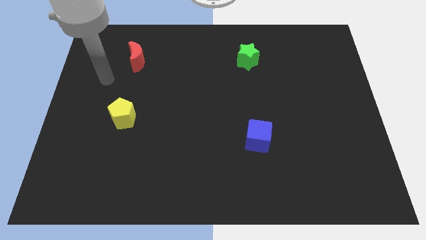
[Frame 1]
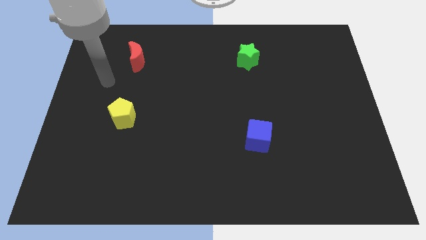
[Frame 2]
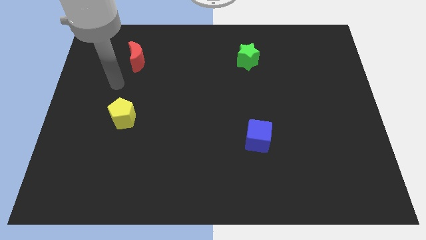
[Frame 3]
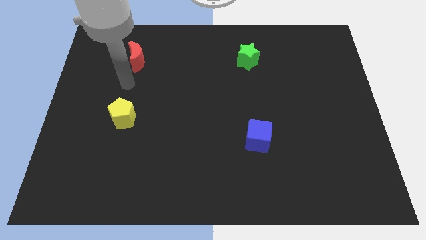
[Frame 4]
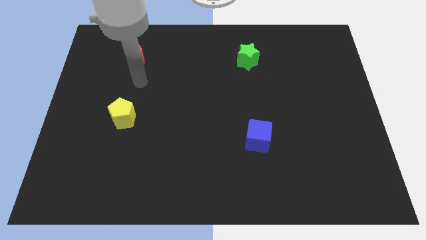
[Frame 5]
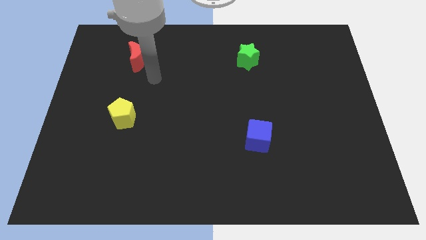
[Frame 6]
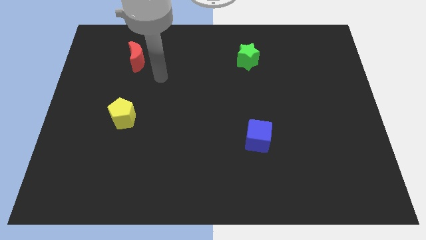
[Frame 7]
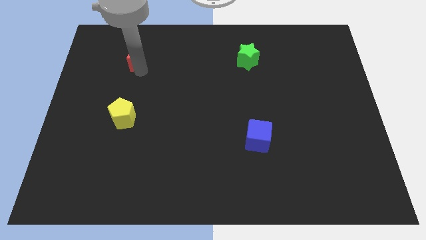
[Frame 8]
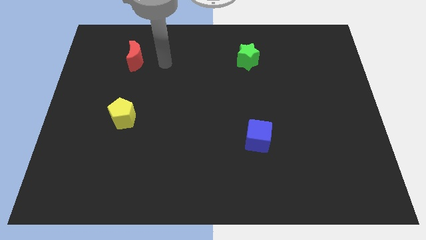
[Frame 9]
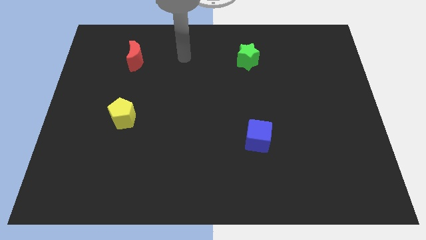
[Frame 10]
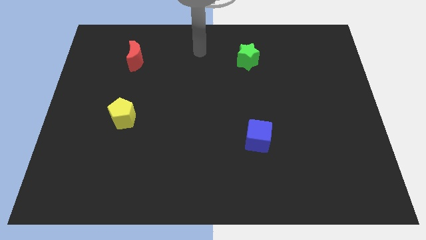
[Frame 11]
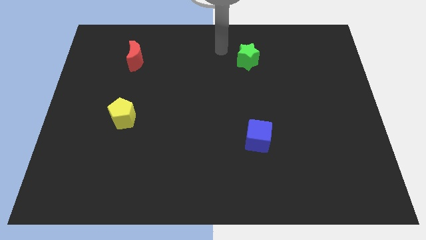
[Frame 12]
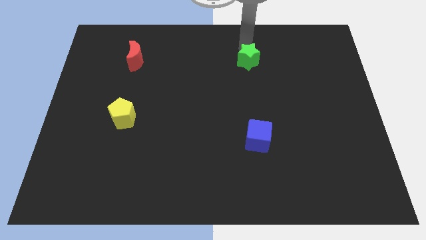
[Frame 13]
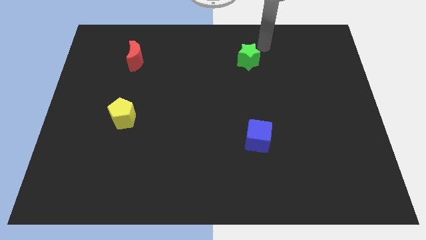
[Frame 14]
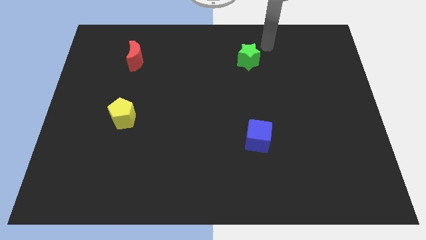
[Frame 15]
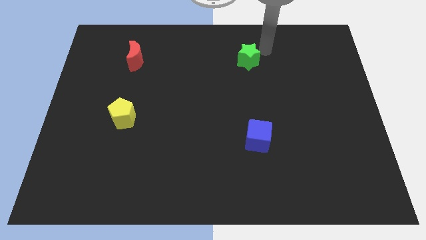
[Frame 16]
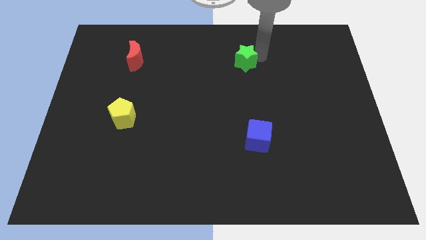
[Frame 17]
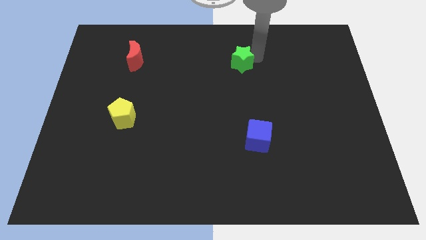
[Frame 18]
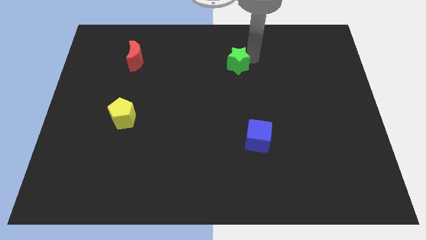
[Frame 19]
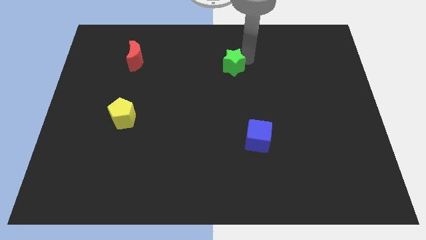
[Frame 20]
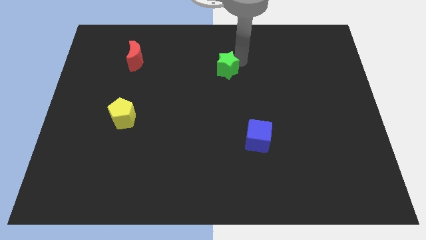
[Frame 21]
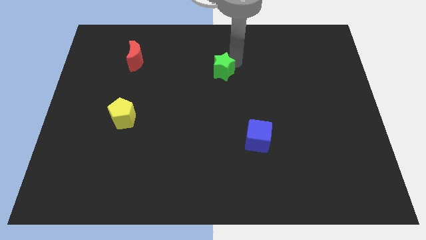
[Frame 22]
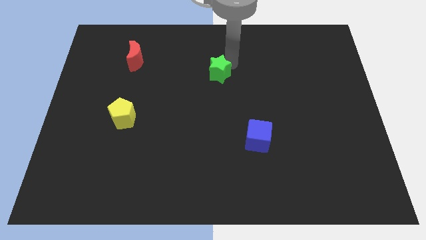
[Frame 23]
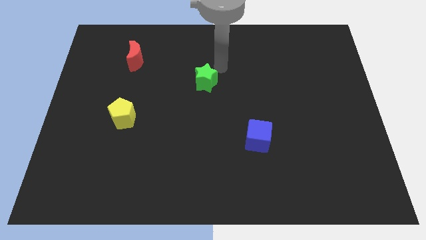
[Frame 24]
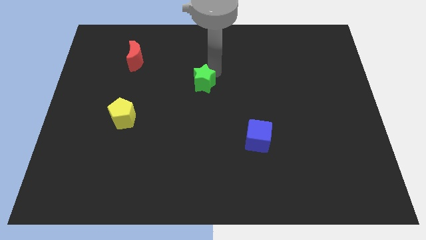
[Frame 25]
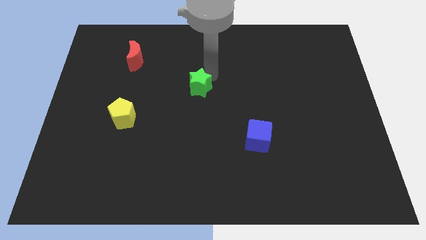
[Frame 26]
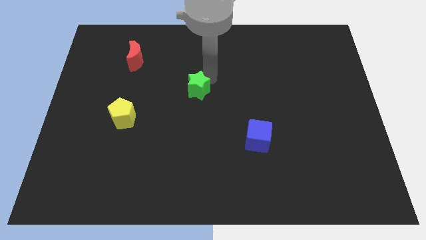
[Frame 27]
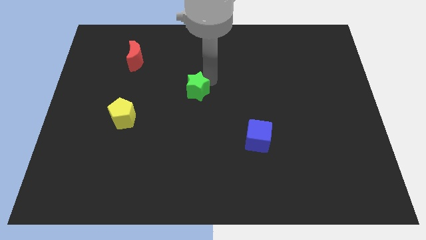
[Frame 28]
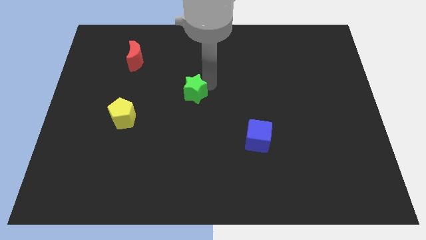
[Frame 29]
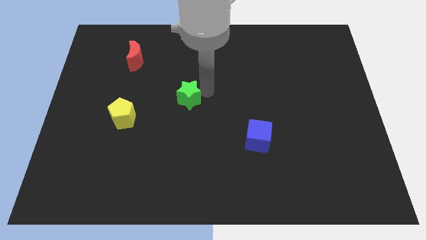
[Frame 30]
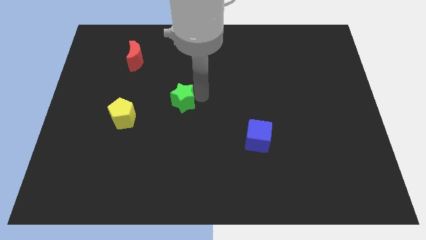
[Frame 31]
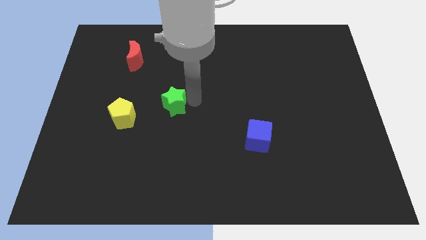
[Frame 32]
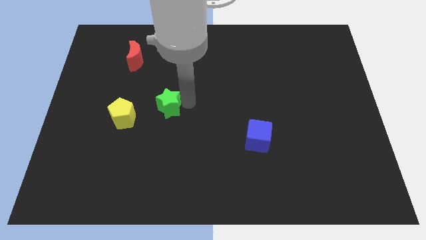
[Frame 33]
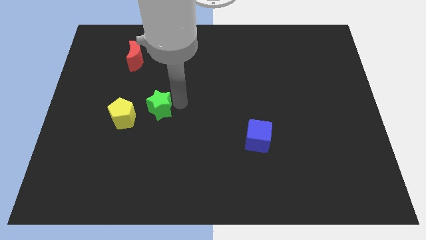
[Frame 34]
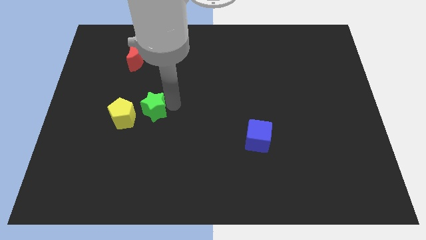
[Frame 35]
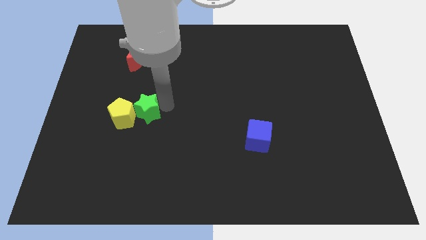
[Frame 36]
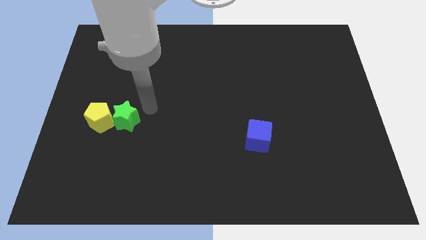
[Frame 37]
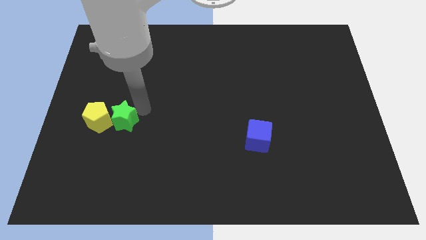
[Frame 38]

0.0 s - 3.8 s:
move the green block to the yellow pentagon

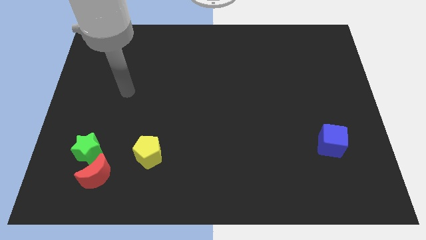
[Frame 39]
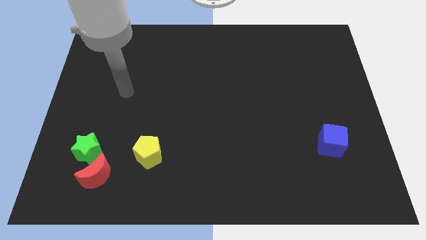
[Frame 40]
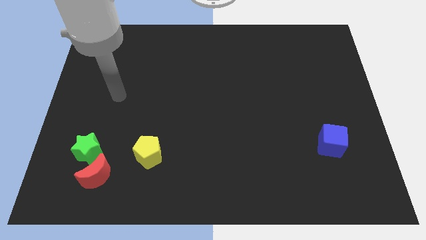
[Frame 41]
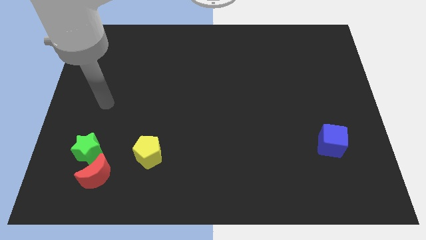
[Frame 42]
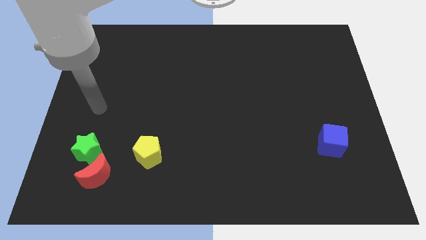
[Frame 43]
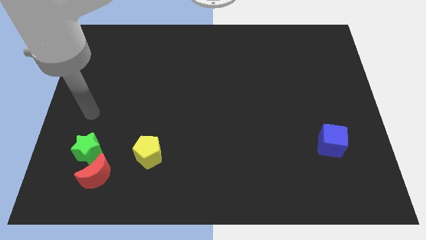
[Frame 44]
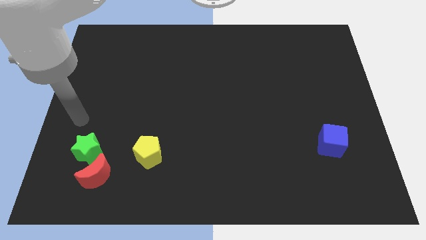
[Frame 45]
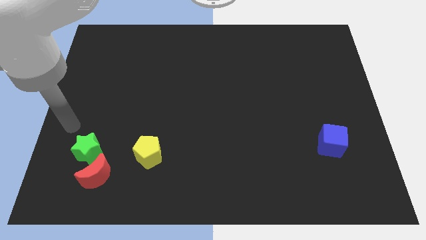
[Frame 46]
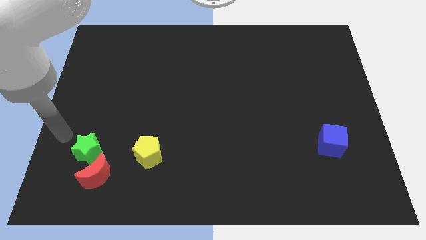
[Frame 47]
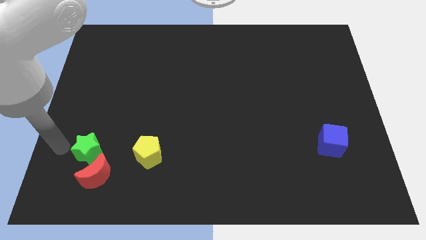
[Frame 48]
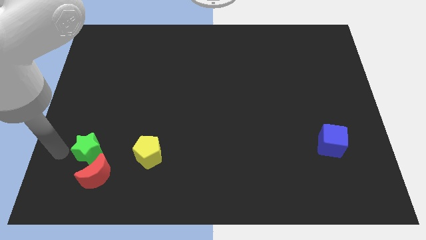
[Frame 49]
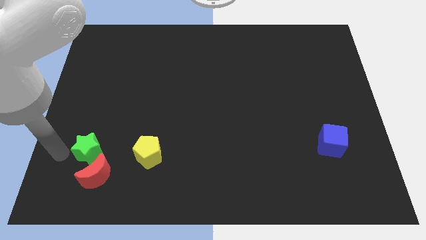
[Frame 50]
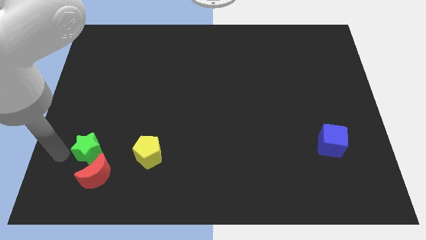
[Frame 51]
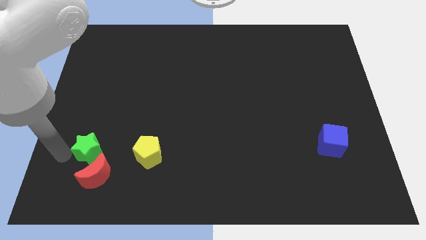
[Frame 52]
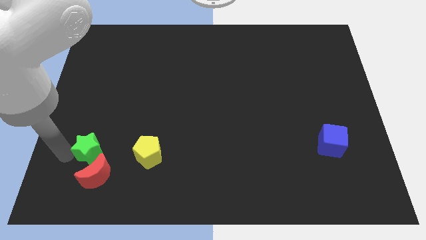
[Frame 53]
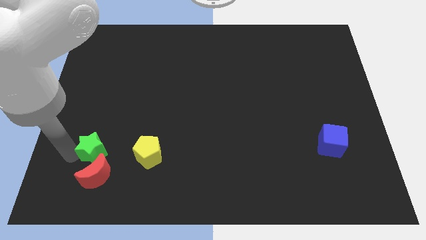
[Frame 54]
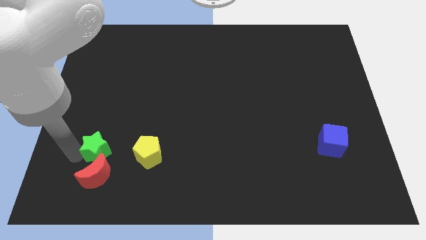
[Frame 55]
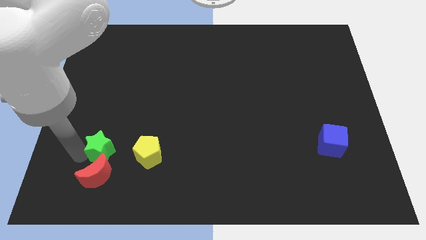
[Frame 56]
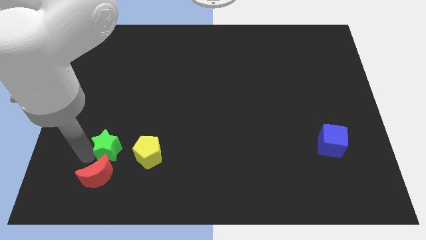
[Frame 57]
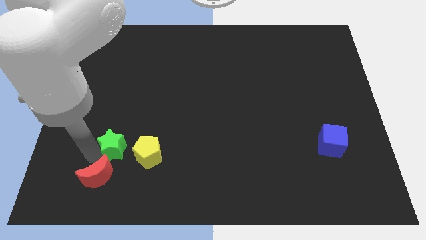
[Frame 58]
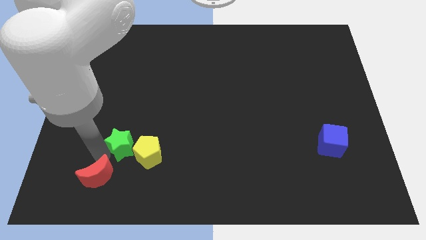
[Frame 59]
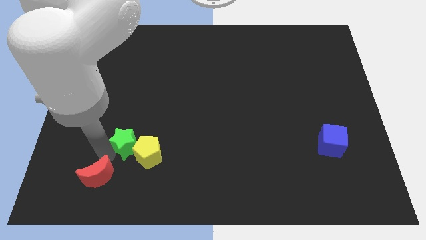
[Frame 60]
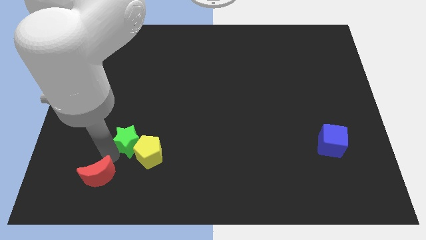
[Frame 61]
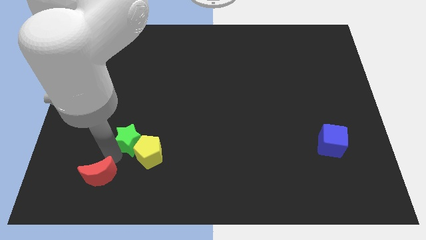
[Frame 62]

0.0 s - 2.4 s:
move the star to the yellow pentagon

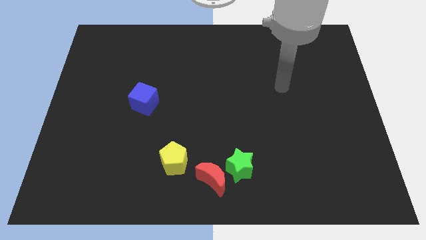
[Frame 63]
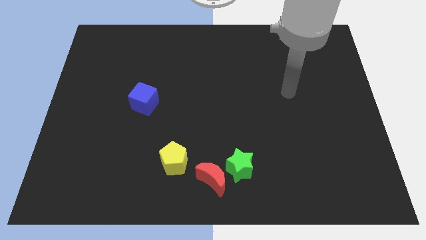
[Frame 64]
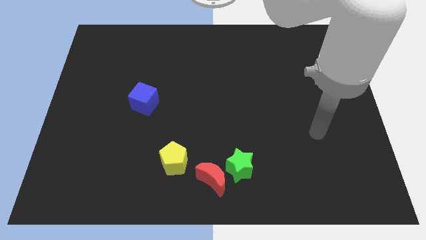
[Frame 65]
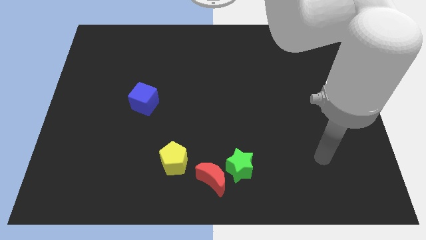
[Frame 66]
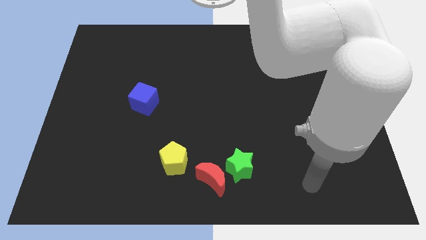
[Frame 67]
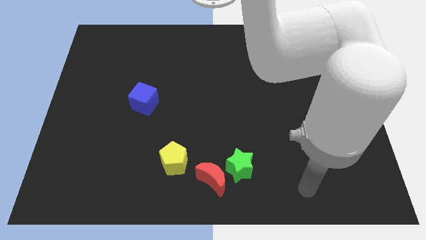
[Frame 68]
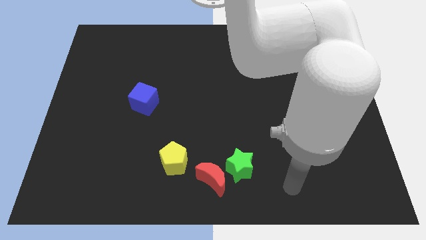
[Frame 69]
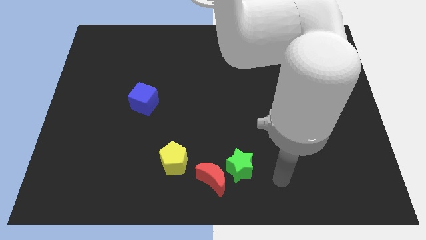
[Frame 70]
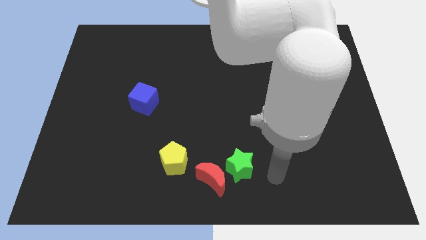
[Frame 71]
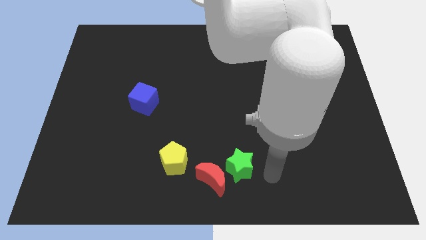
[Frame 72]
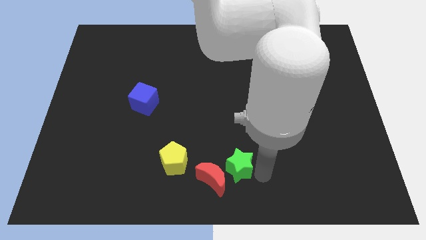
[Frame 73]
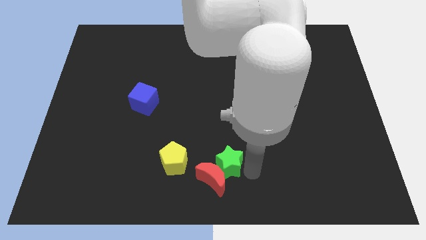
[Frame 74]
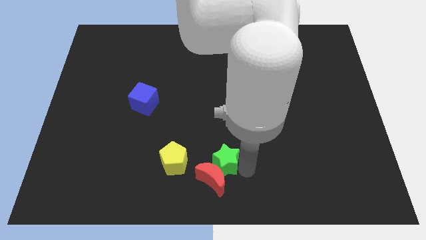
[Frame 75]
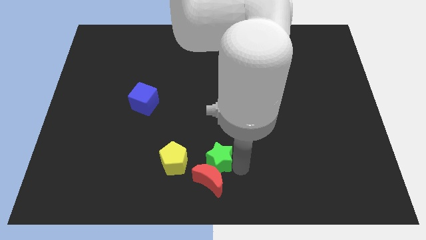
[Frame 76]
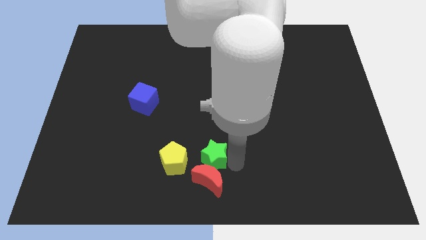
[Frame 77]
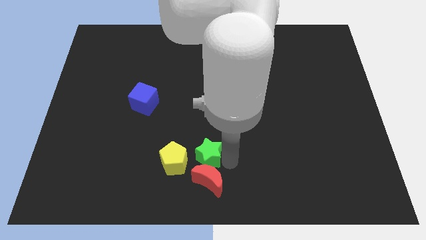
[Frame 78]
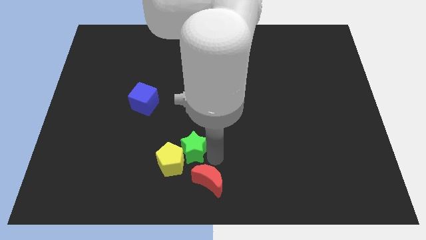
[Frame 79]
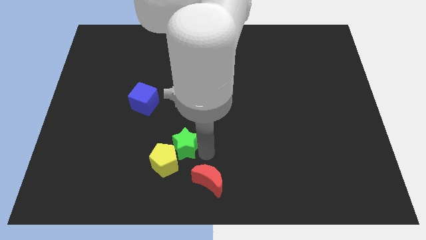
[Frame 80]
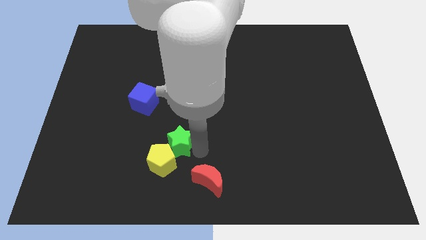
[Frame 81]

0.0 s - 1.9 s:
push the green block next to the pentagon

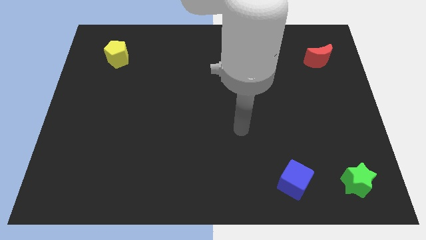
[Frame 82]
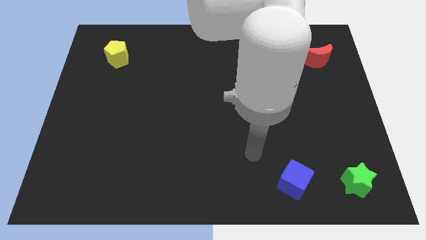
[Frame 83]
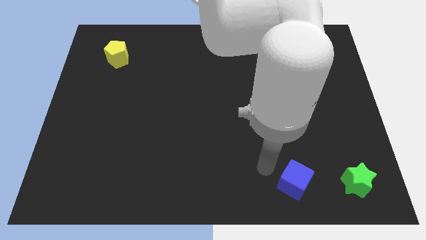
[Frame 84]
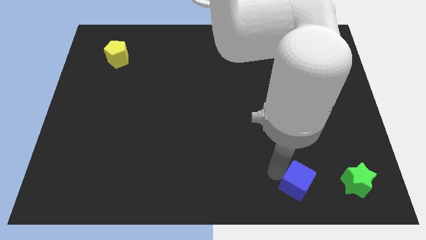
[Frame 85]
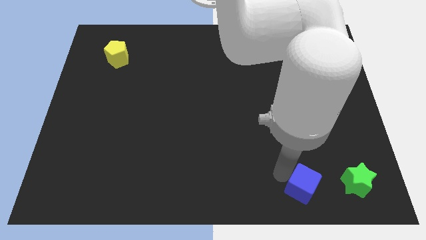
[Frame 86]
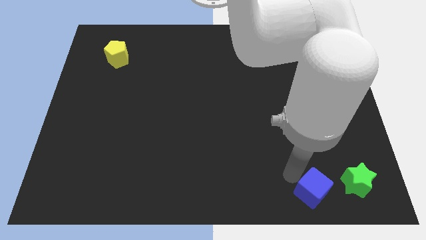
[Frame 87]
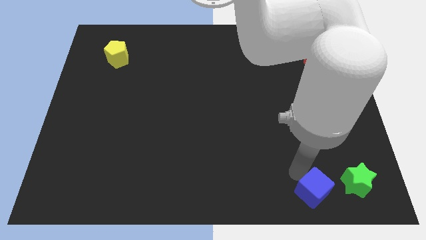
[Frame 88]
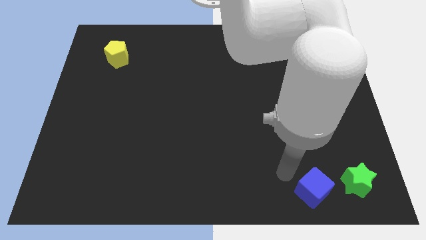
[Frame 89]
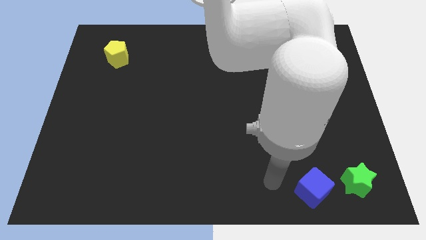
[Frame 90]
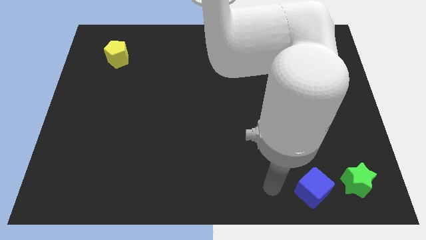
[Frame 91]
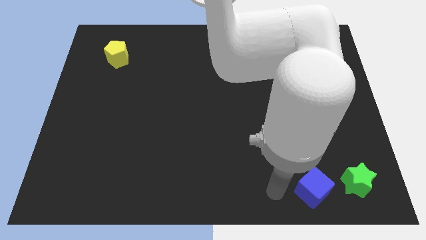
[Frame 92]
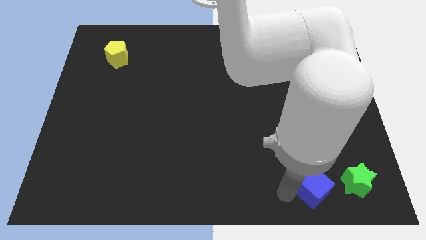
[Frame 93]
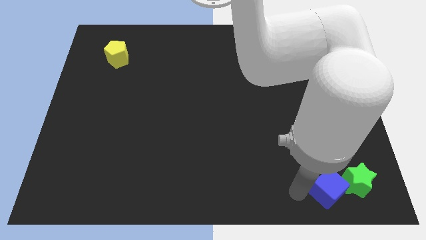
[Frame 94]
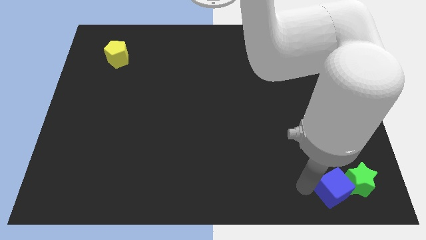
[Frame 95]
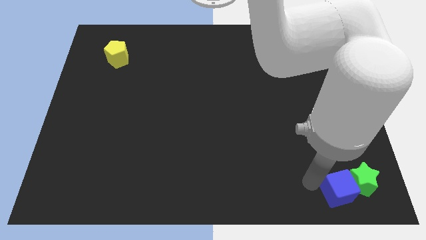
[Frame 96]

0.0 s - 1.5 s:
move the blue block towards the green block
